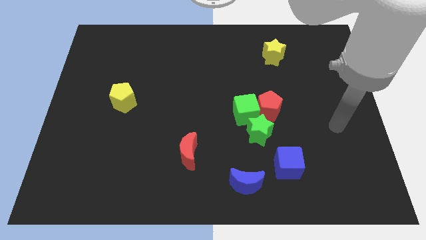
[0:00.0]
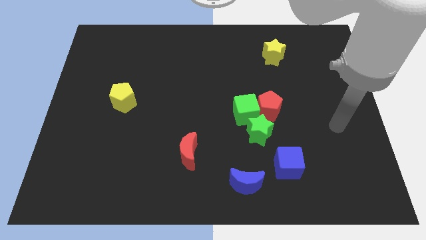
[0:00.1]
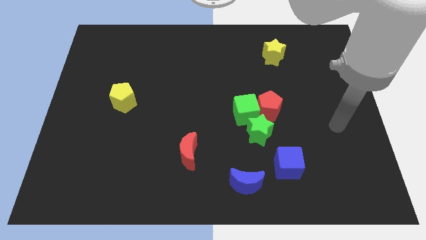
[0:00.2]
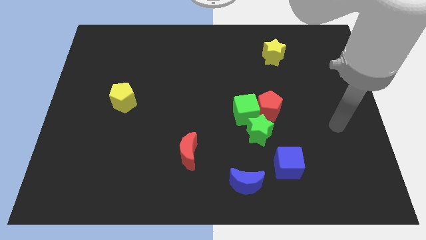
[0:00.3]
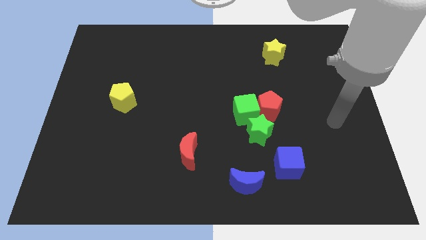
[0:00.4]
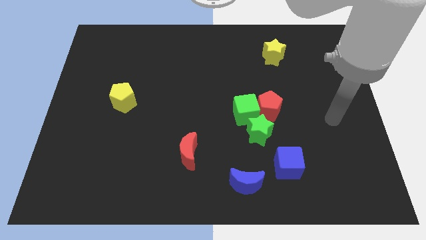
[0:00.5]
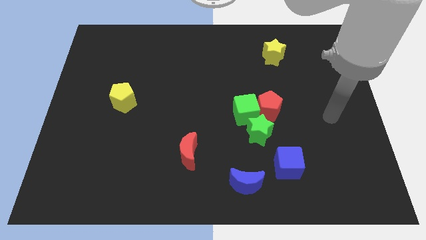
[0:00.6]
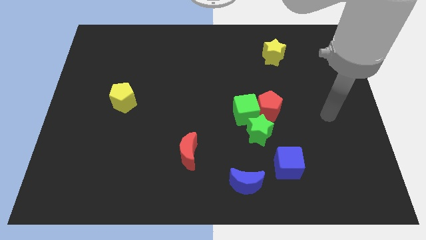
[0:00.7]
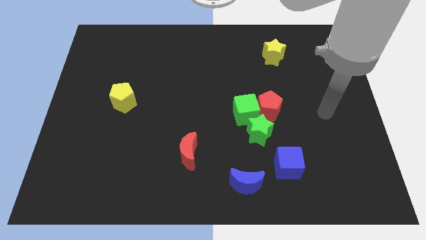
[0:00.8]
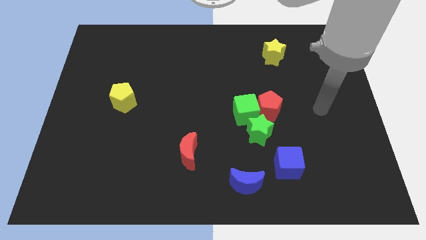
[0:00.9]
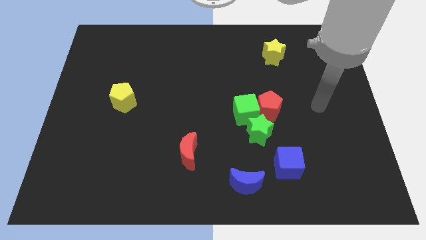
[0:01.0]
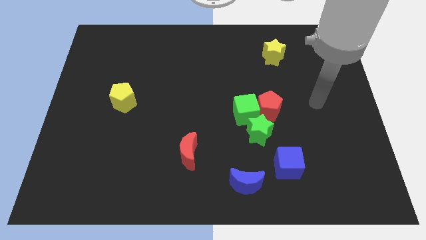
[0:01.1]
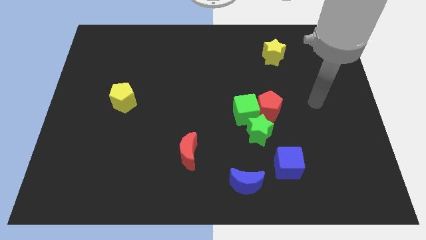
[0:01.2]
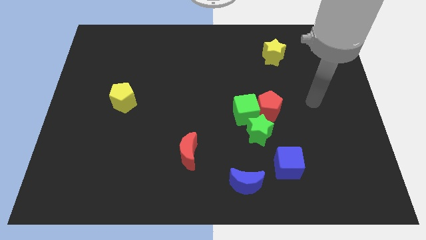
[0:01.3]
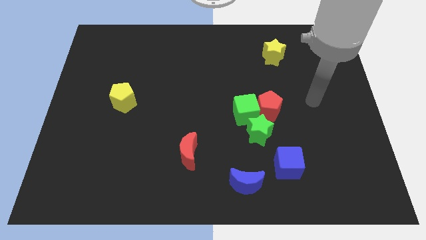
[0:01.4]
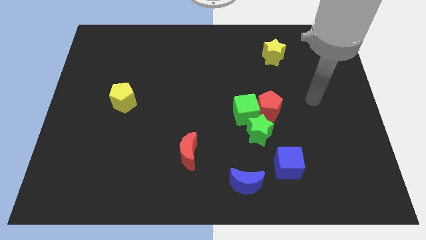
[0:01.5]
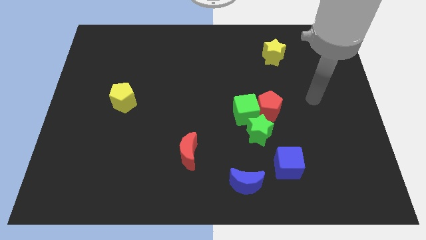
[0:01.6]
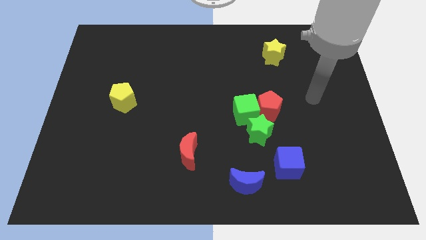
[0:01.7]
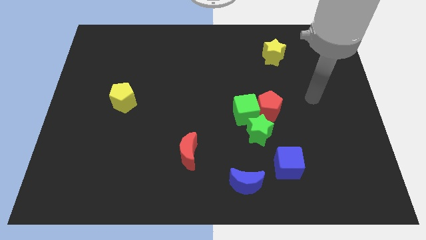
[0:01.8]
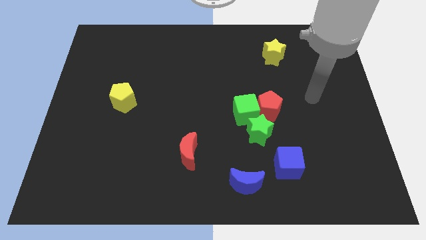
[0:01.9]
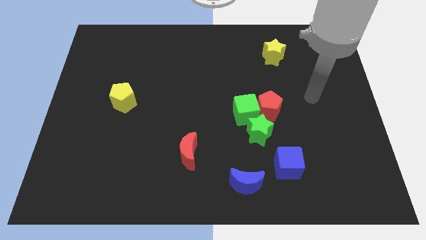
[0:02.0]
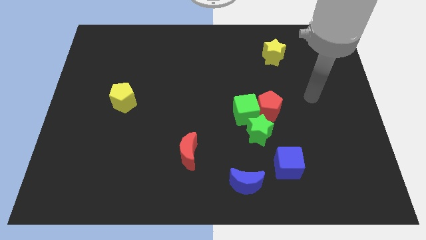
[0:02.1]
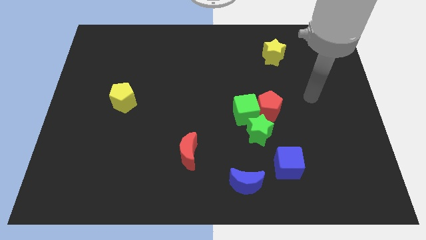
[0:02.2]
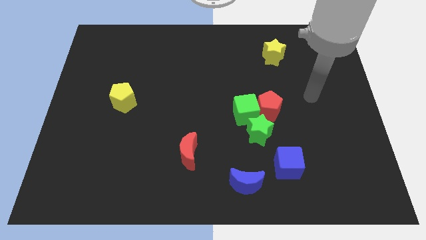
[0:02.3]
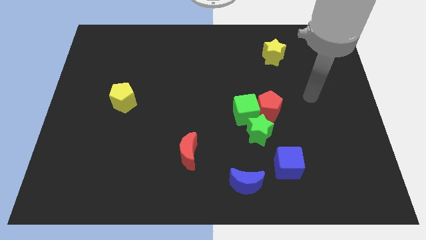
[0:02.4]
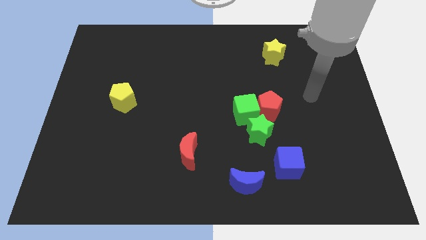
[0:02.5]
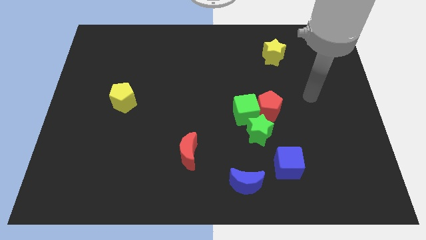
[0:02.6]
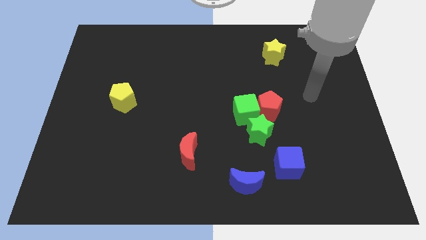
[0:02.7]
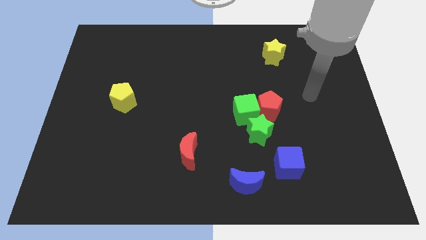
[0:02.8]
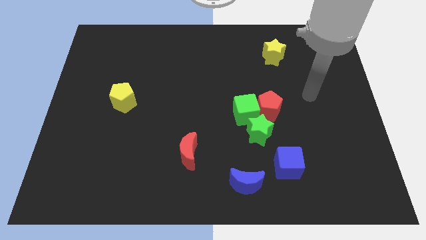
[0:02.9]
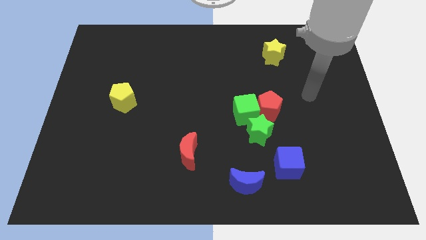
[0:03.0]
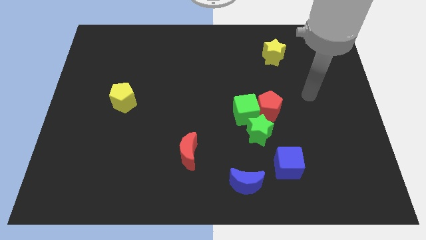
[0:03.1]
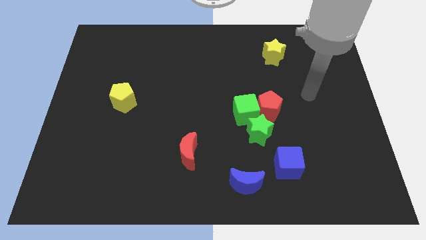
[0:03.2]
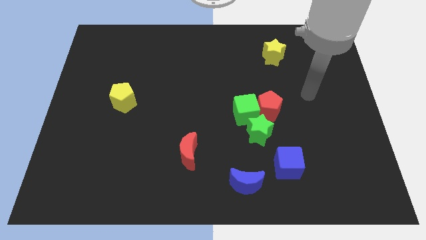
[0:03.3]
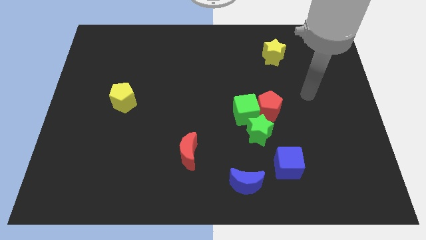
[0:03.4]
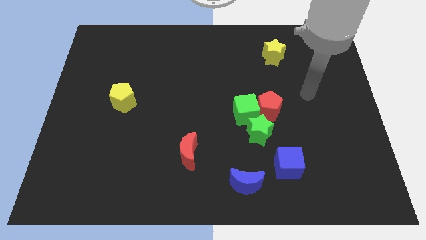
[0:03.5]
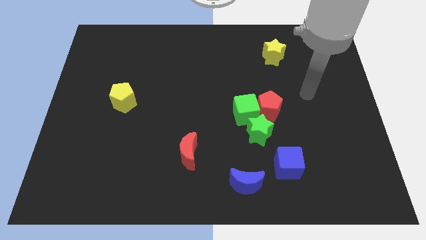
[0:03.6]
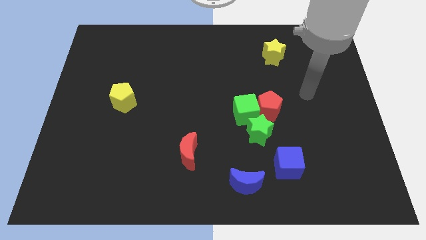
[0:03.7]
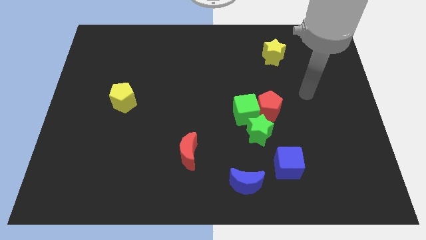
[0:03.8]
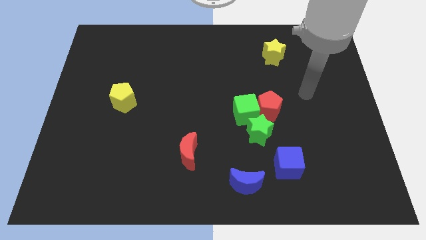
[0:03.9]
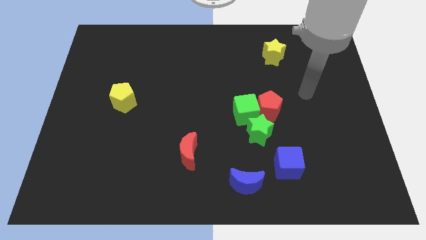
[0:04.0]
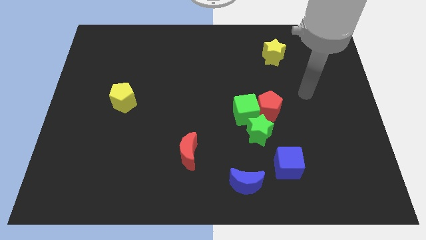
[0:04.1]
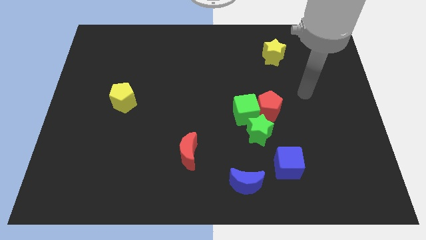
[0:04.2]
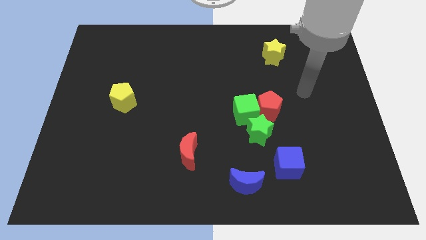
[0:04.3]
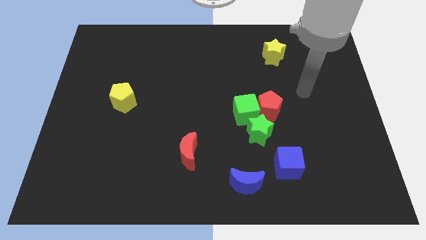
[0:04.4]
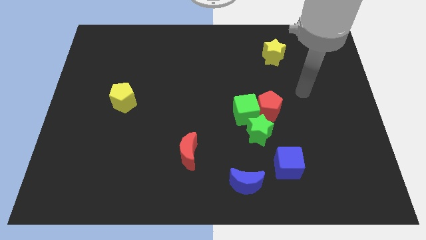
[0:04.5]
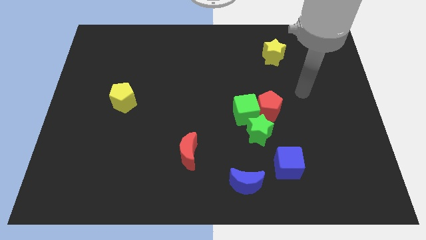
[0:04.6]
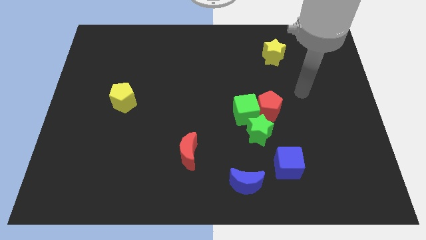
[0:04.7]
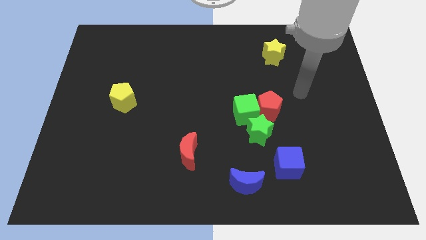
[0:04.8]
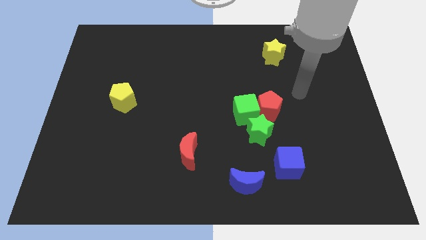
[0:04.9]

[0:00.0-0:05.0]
move the arm towards the red pentagon

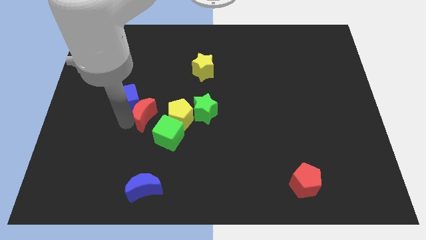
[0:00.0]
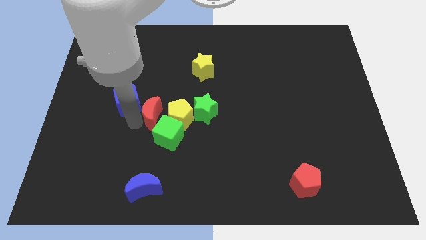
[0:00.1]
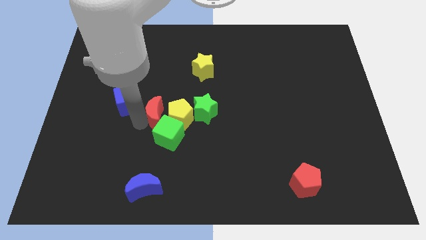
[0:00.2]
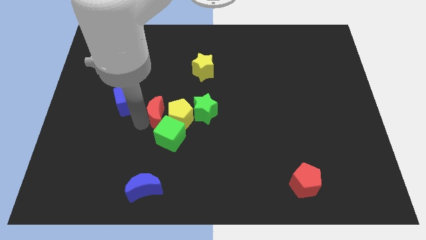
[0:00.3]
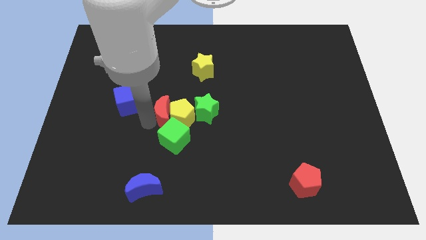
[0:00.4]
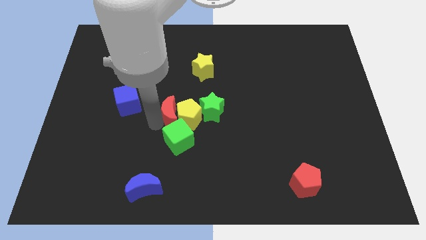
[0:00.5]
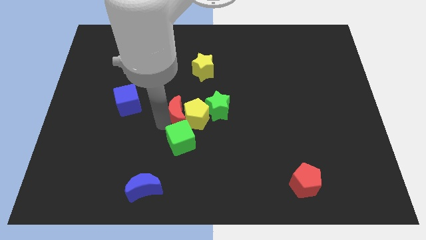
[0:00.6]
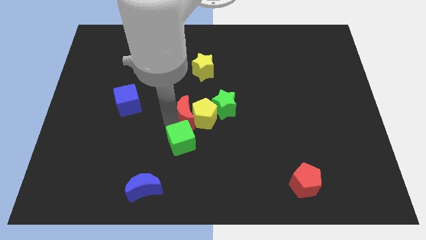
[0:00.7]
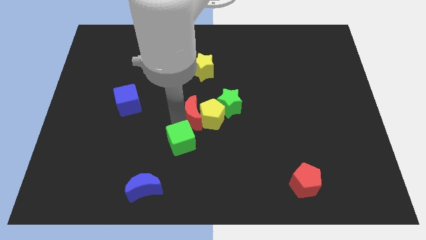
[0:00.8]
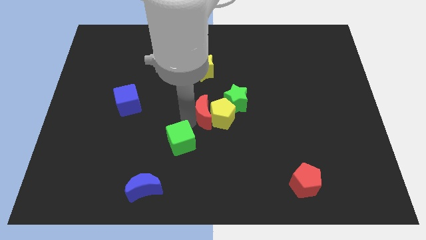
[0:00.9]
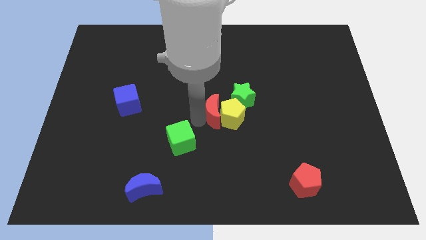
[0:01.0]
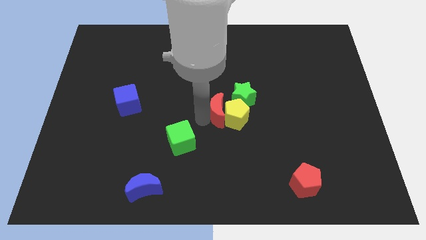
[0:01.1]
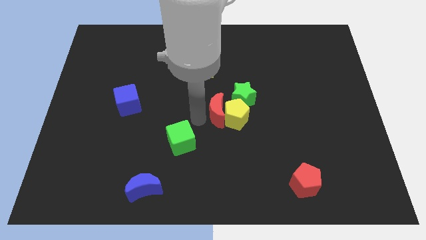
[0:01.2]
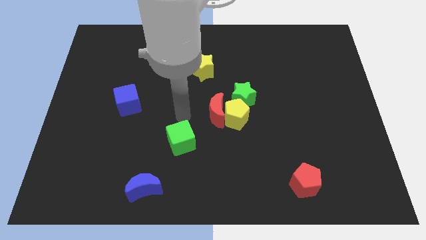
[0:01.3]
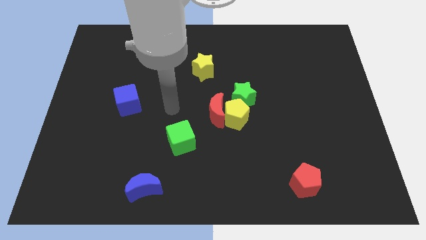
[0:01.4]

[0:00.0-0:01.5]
push the red moon into yellow pentagon

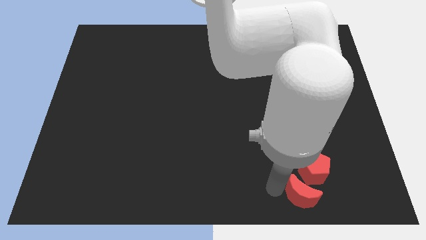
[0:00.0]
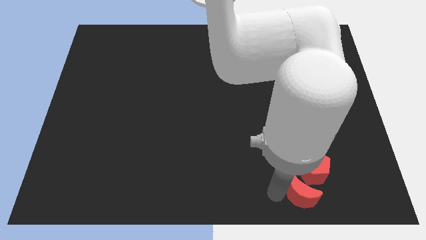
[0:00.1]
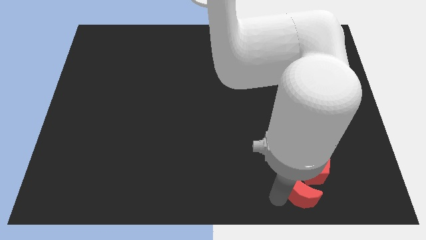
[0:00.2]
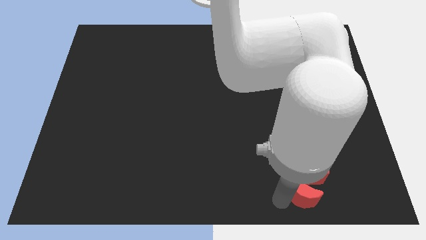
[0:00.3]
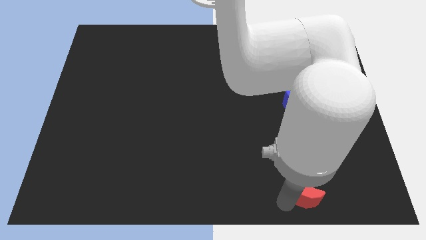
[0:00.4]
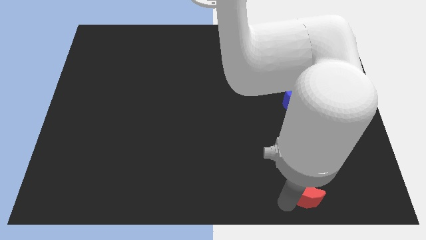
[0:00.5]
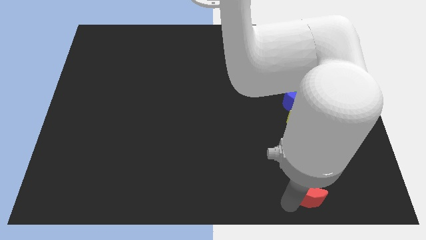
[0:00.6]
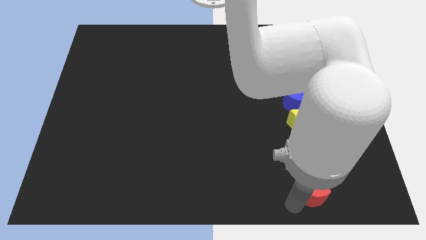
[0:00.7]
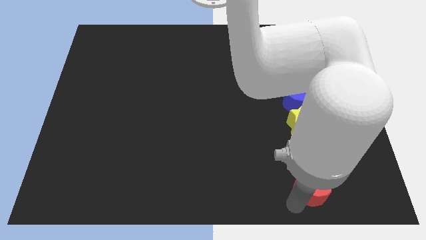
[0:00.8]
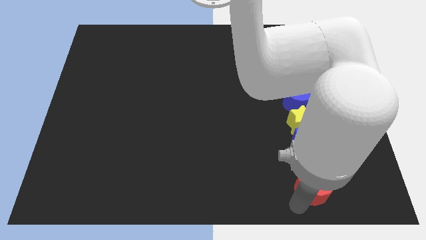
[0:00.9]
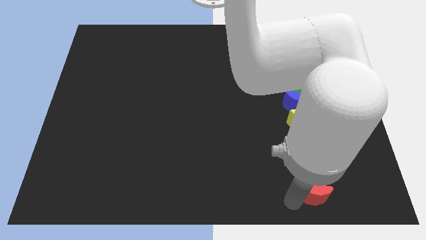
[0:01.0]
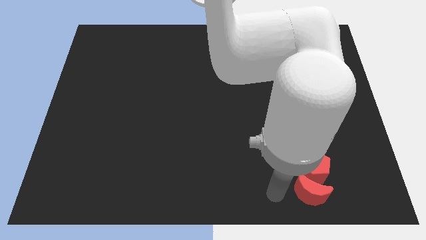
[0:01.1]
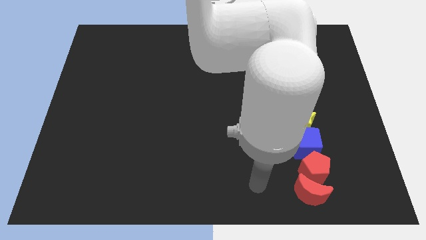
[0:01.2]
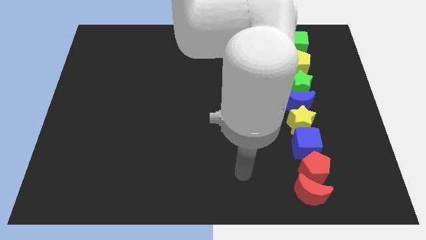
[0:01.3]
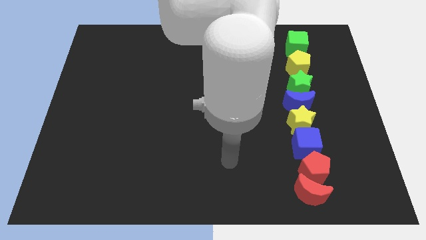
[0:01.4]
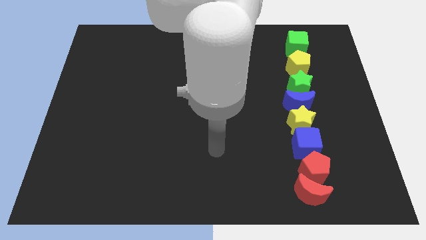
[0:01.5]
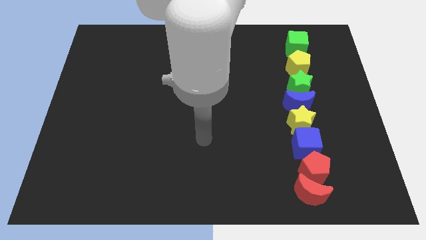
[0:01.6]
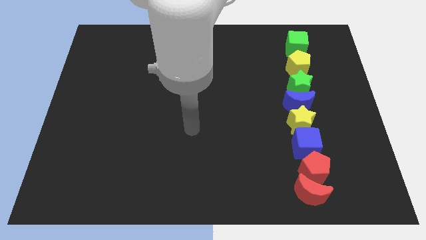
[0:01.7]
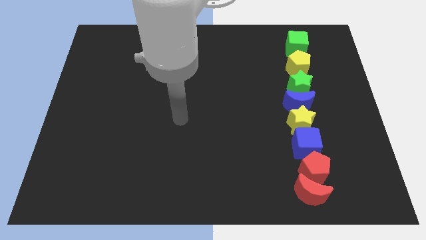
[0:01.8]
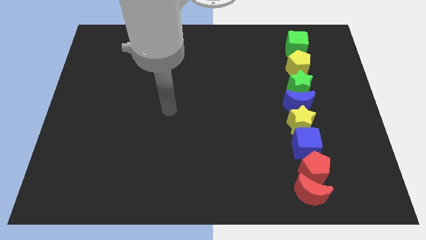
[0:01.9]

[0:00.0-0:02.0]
push the red moon close to the red pentagon

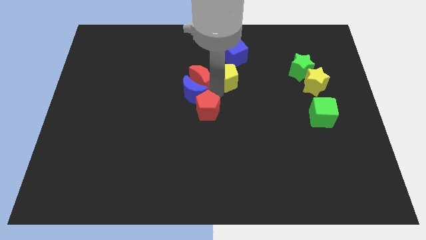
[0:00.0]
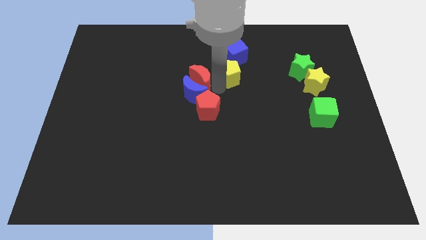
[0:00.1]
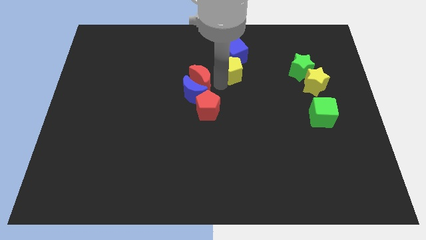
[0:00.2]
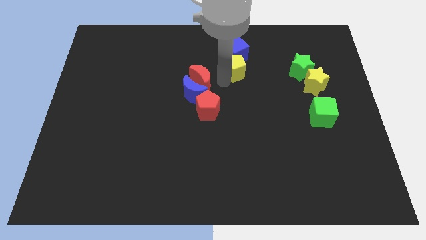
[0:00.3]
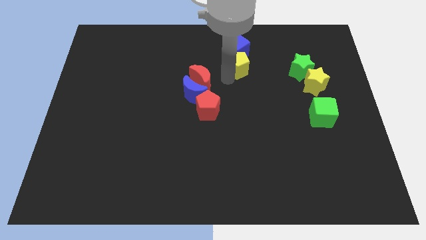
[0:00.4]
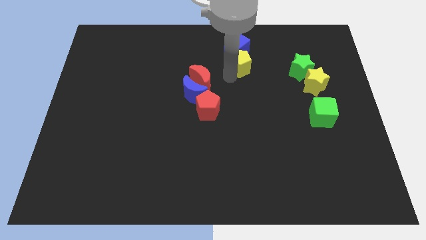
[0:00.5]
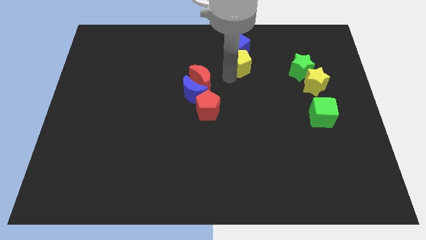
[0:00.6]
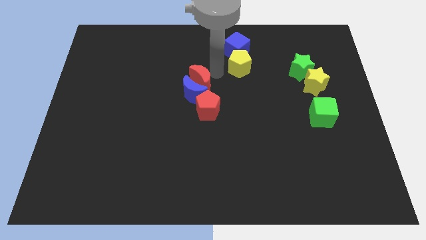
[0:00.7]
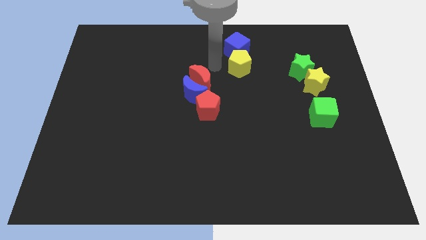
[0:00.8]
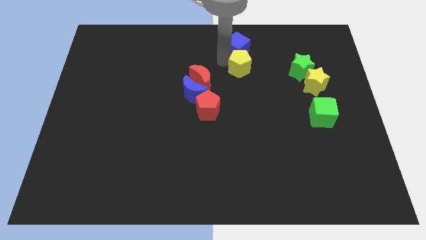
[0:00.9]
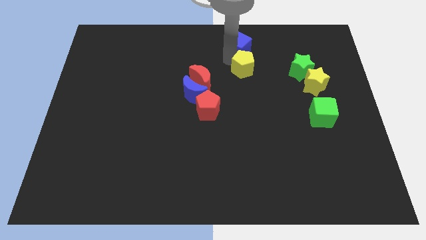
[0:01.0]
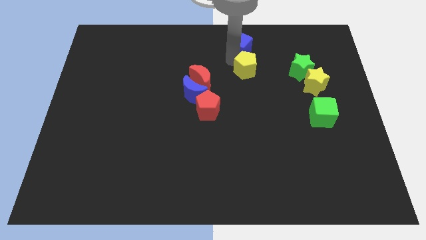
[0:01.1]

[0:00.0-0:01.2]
place yellow pentagon to the bottom of blue cube
